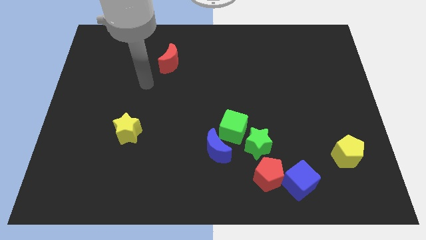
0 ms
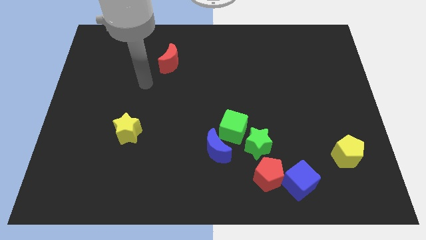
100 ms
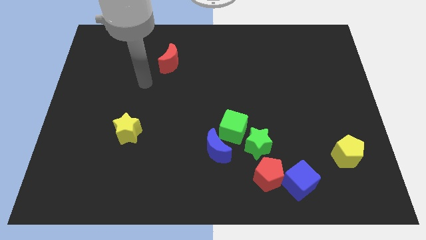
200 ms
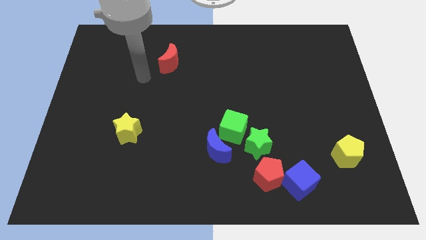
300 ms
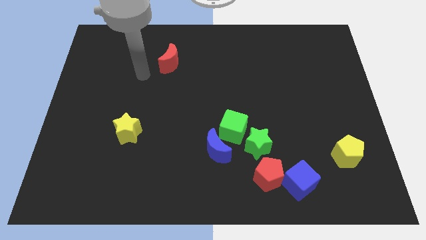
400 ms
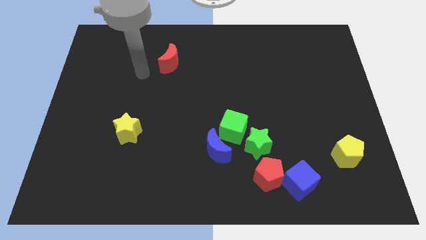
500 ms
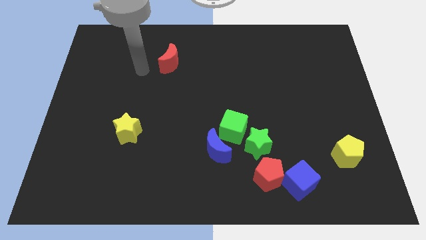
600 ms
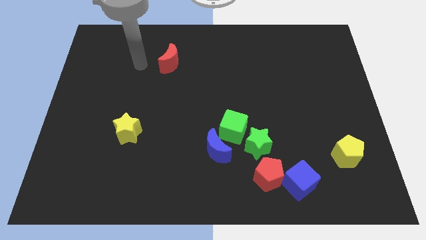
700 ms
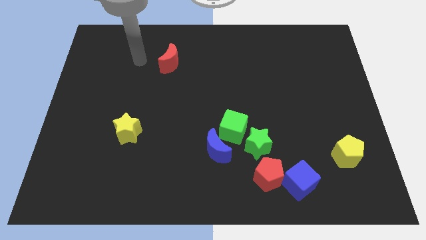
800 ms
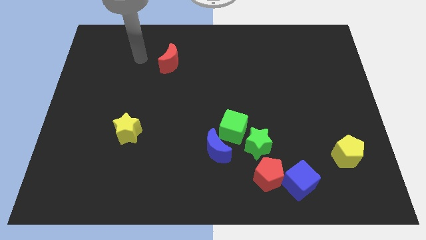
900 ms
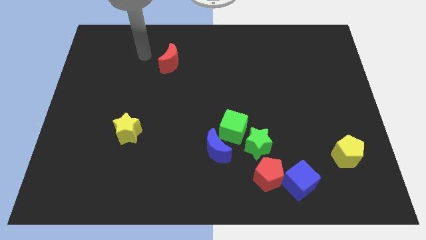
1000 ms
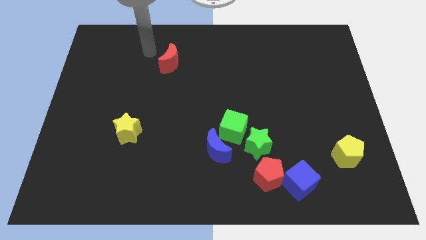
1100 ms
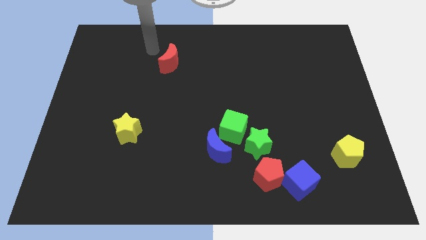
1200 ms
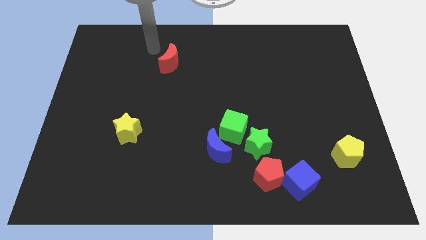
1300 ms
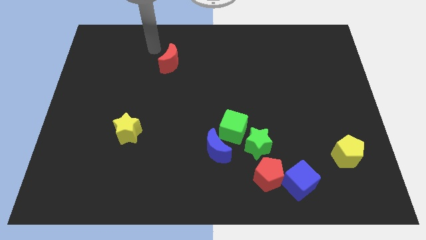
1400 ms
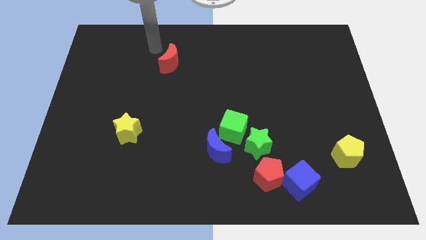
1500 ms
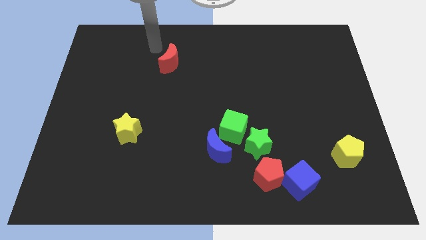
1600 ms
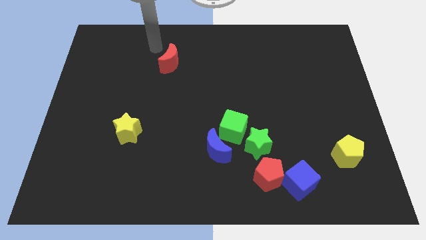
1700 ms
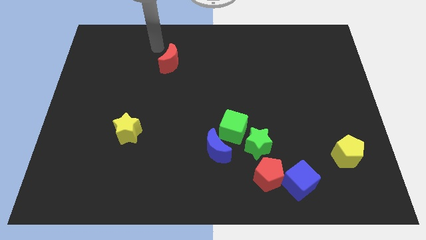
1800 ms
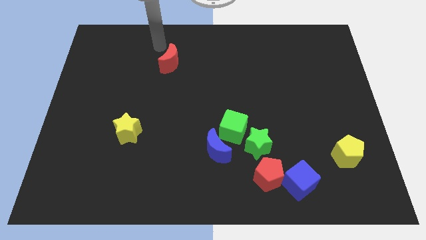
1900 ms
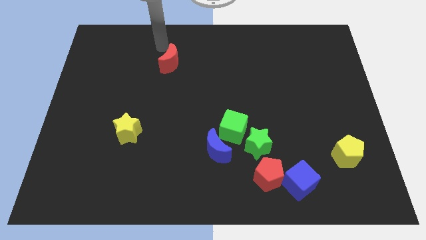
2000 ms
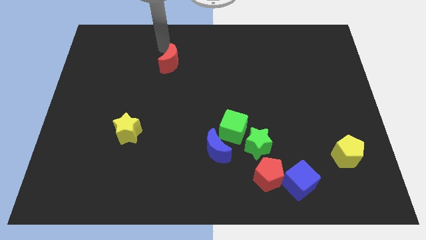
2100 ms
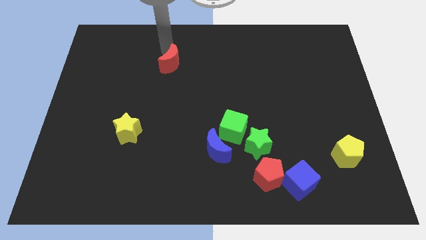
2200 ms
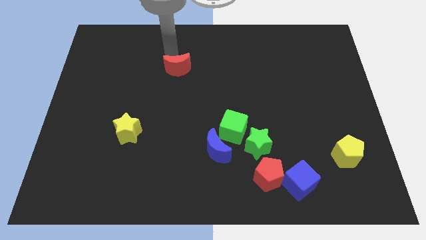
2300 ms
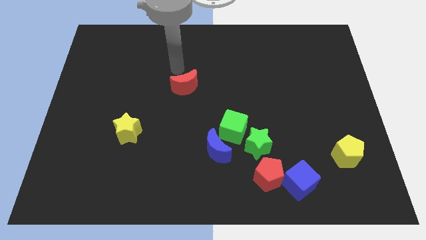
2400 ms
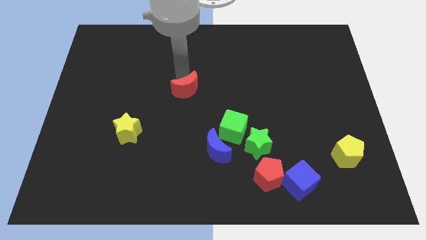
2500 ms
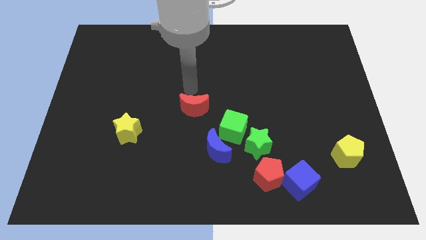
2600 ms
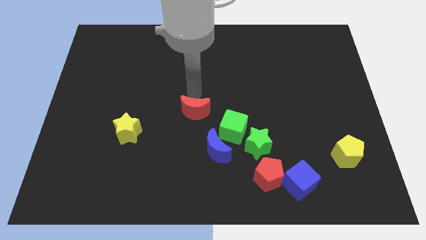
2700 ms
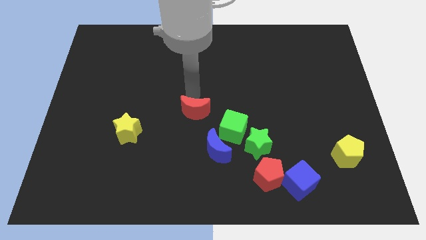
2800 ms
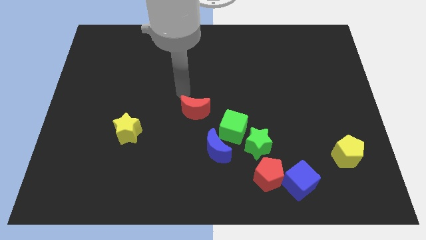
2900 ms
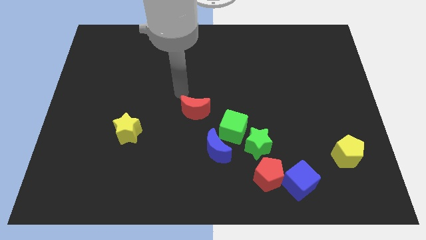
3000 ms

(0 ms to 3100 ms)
move the red crescent to the center of the board

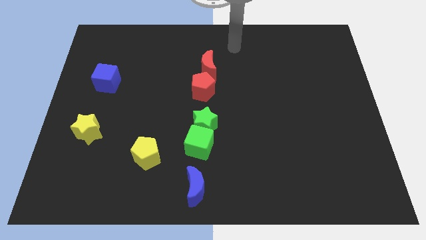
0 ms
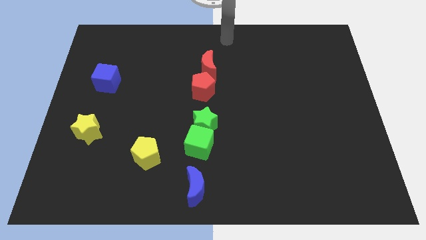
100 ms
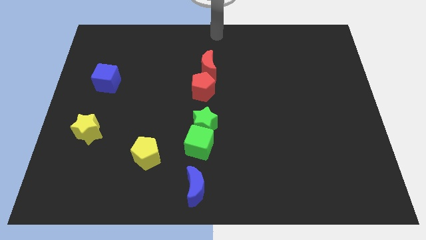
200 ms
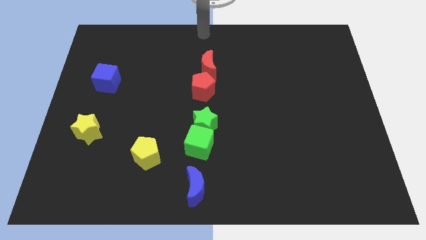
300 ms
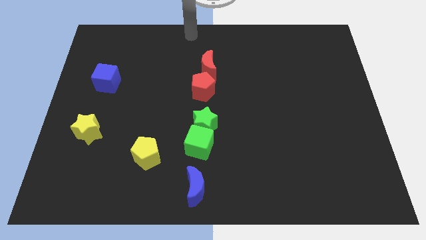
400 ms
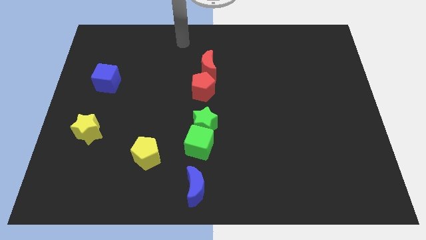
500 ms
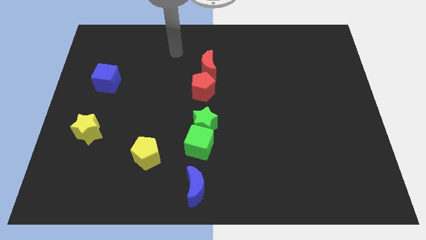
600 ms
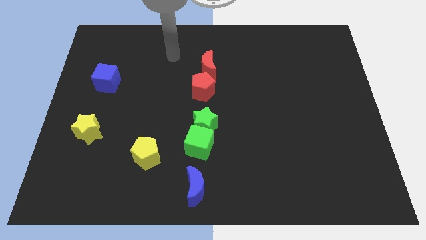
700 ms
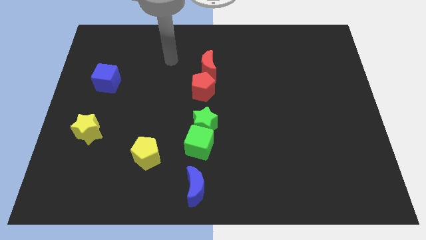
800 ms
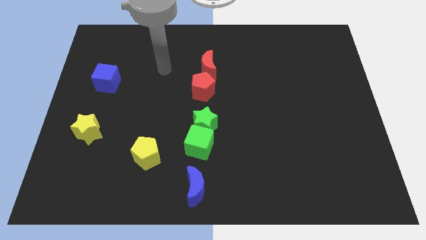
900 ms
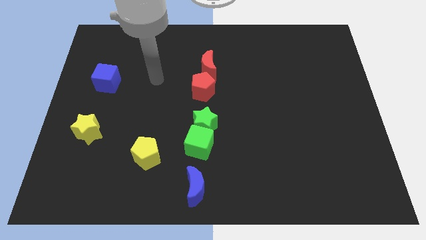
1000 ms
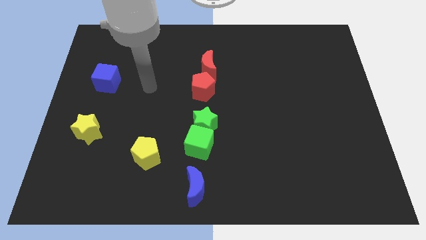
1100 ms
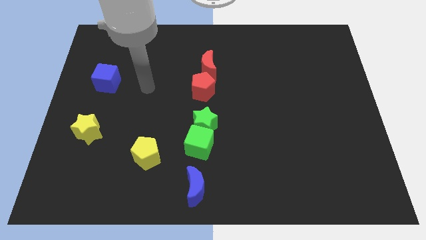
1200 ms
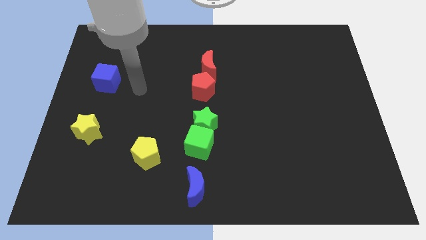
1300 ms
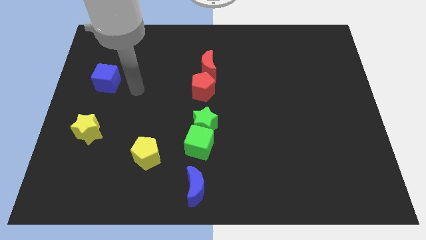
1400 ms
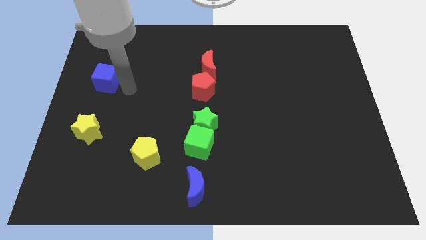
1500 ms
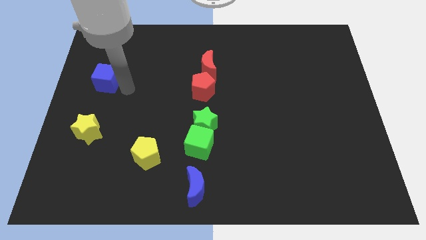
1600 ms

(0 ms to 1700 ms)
move your arm to the right of blue cube

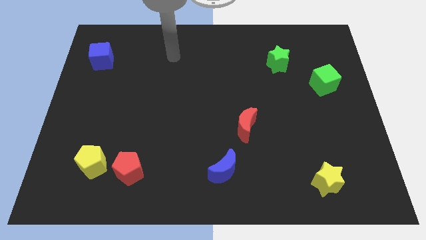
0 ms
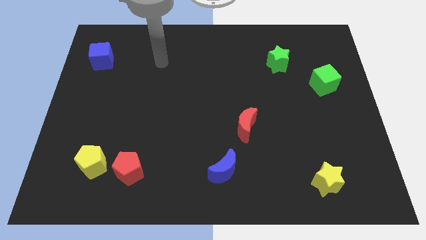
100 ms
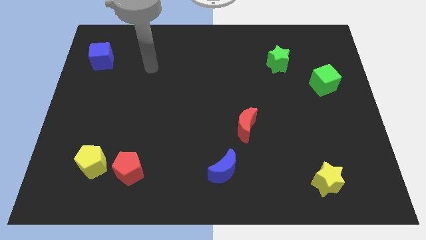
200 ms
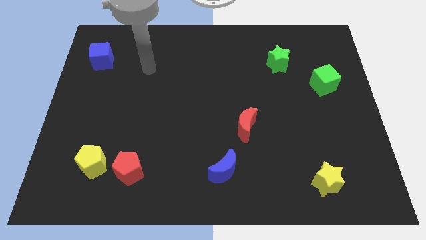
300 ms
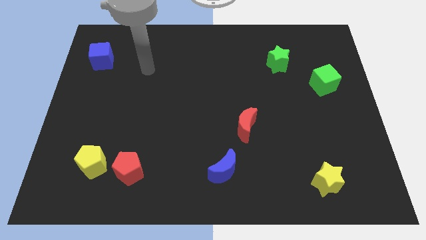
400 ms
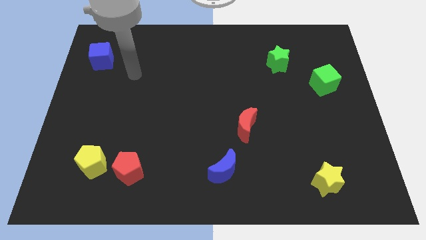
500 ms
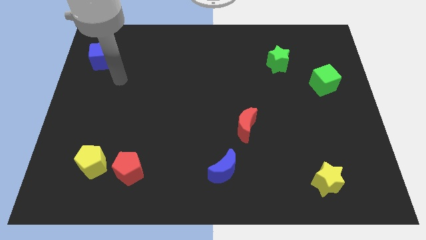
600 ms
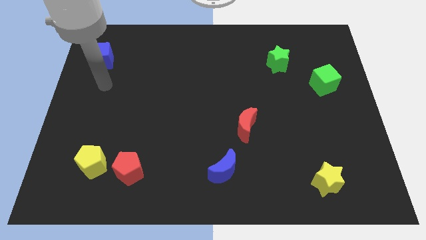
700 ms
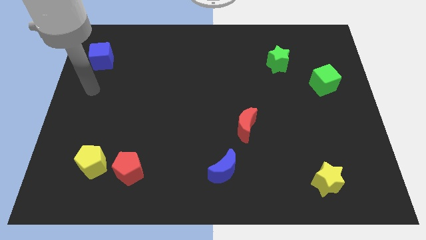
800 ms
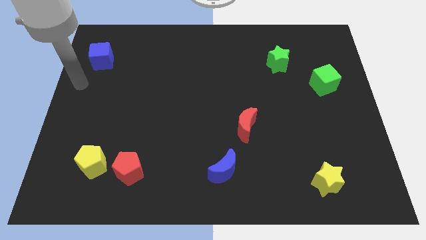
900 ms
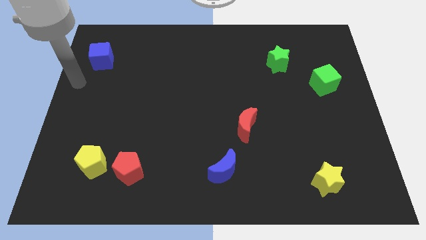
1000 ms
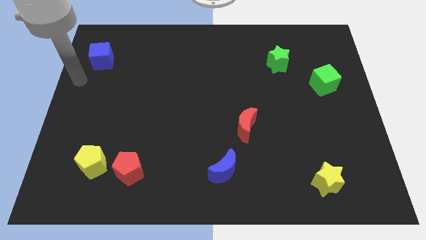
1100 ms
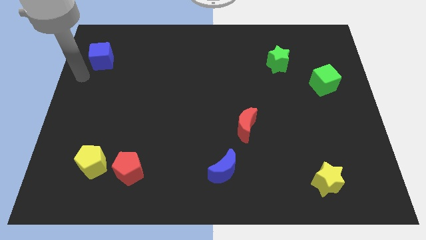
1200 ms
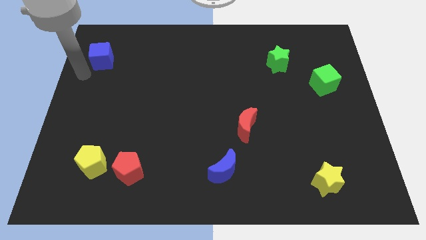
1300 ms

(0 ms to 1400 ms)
move your arm to the bottom left of the blue cube

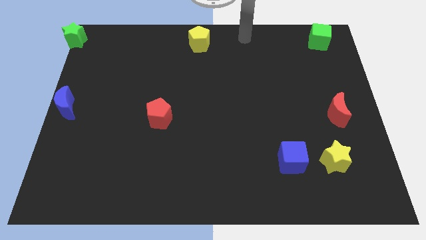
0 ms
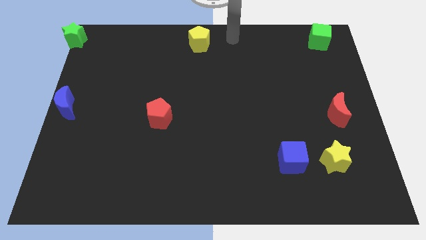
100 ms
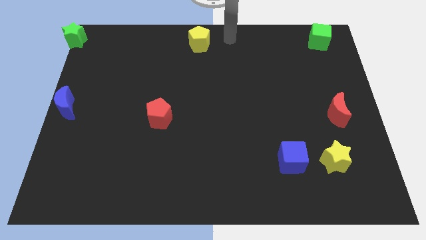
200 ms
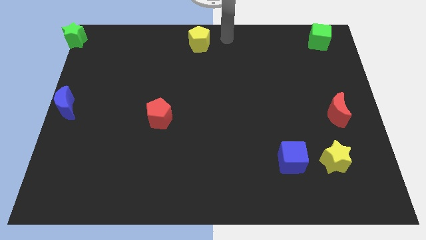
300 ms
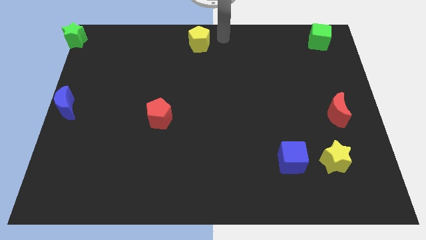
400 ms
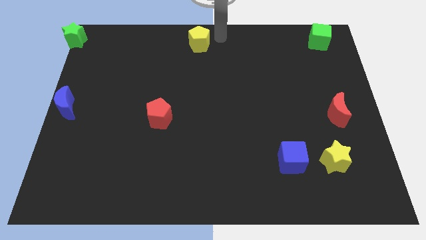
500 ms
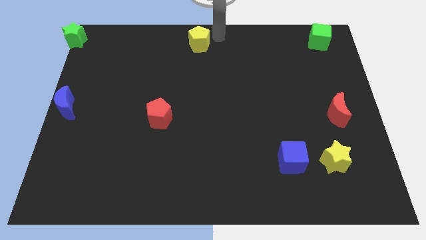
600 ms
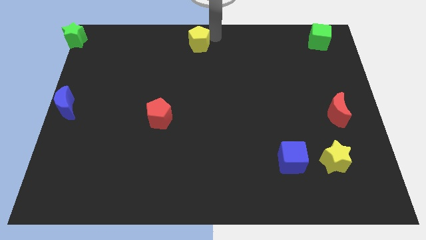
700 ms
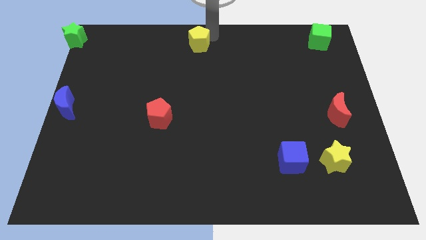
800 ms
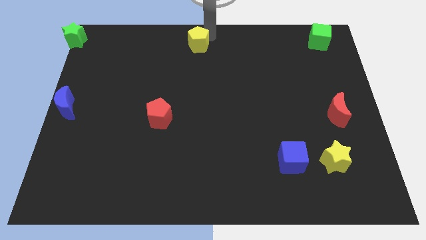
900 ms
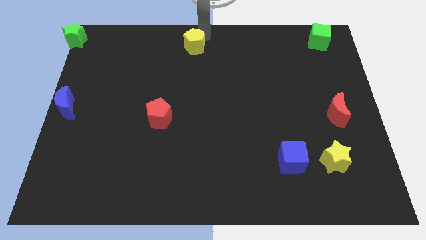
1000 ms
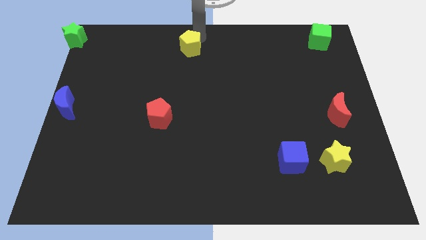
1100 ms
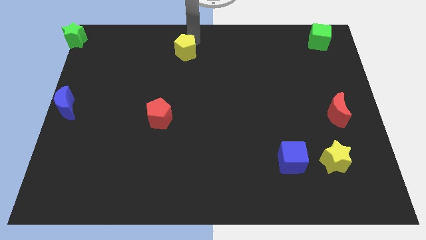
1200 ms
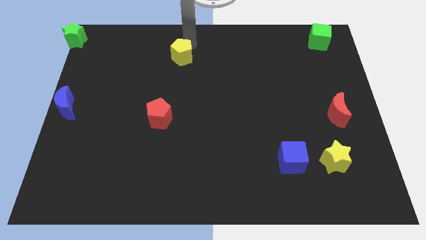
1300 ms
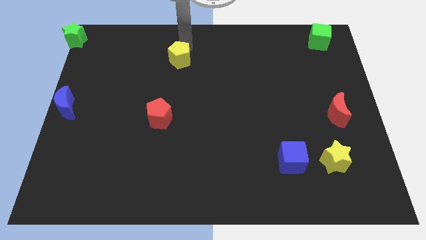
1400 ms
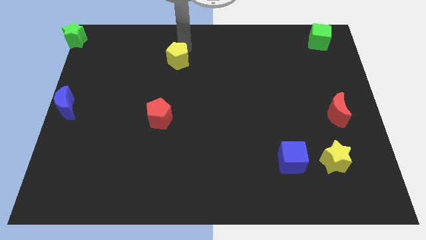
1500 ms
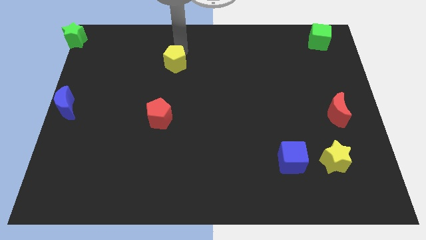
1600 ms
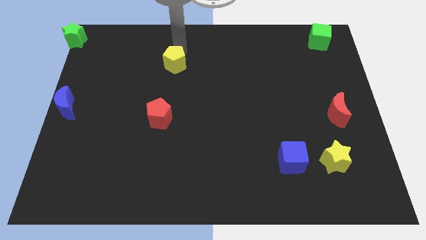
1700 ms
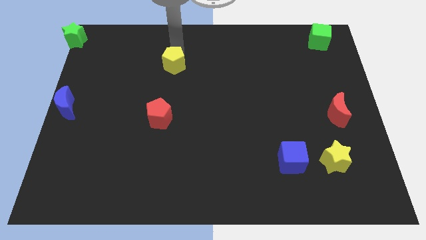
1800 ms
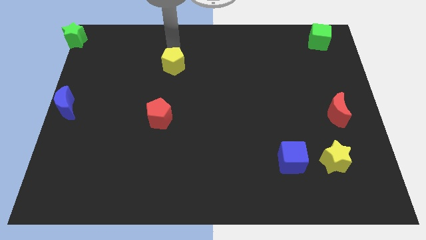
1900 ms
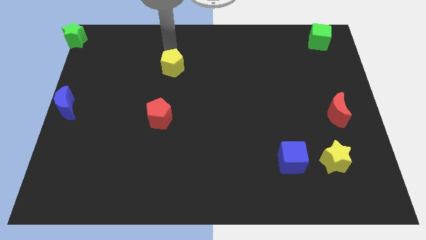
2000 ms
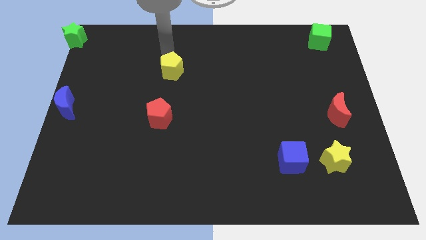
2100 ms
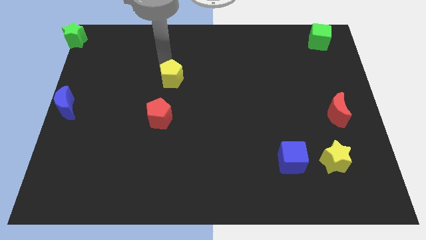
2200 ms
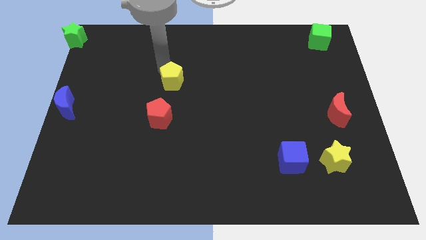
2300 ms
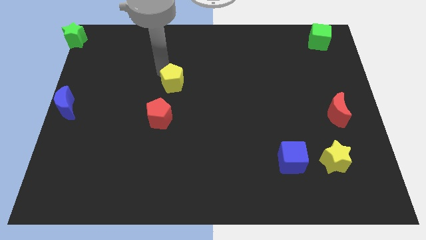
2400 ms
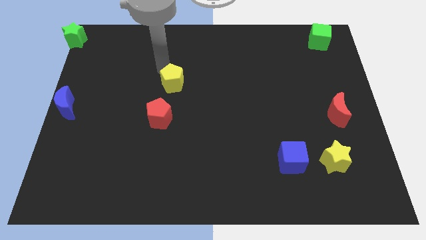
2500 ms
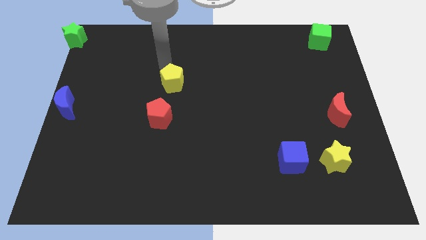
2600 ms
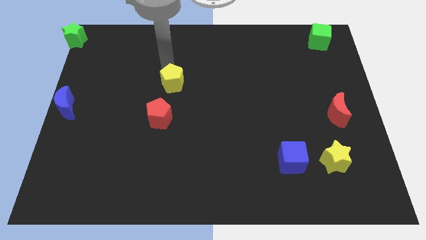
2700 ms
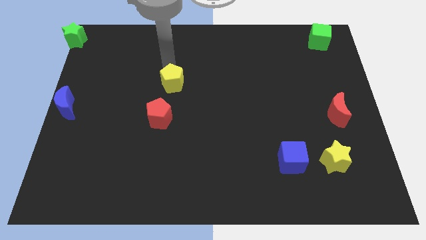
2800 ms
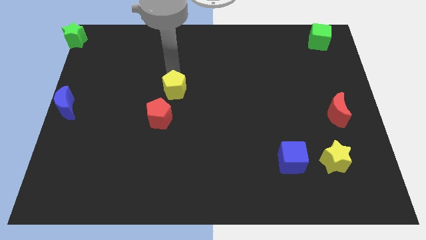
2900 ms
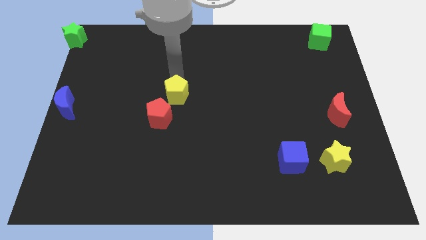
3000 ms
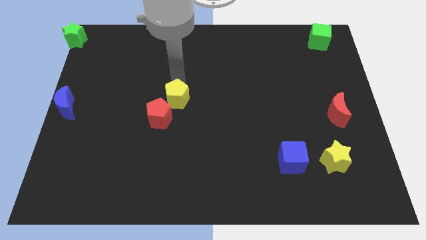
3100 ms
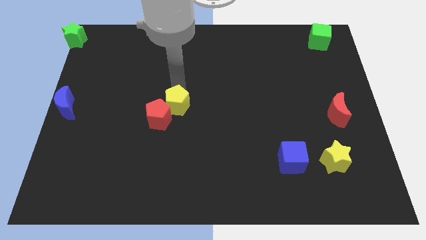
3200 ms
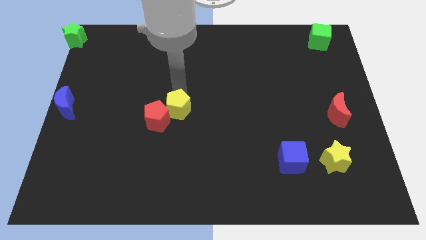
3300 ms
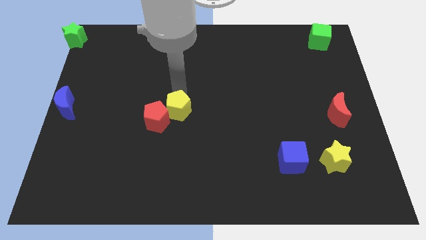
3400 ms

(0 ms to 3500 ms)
move the yellow pentagon to the top right of the red pentagon
